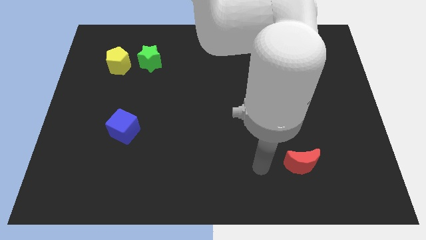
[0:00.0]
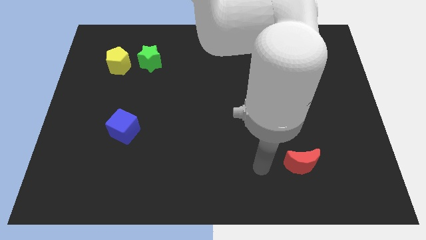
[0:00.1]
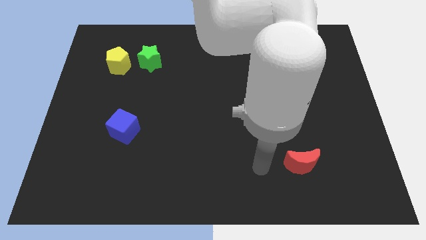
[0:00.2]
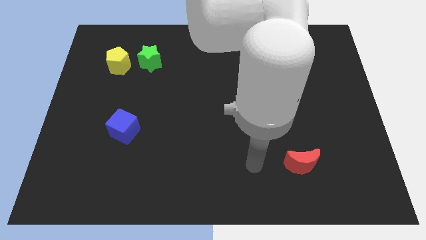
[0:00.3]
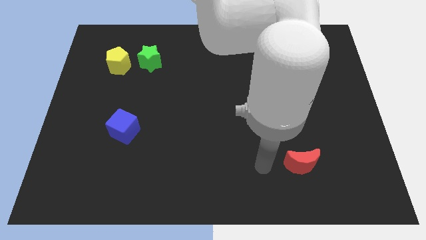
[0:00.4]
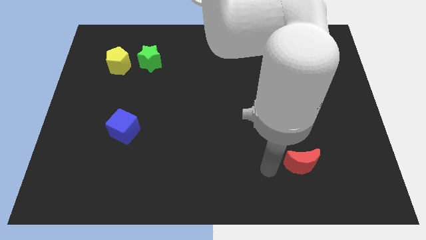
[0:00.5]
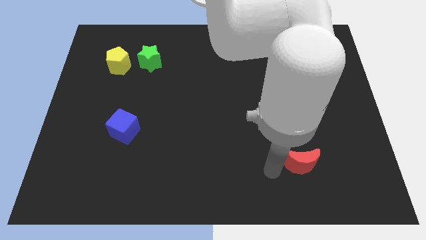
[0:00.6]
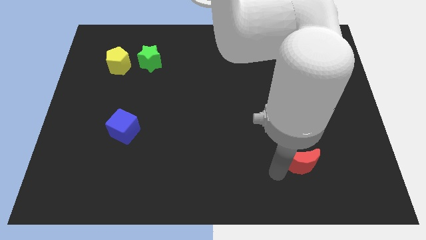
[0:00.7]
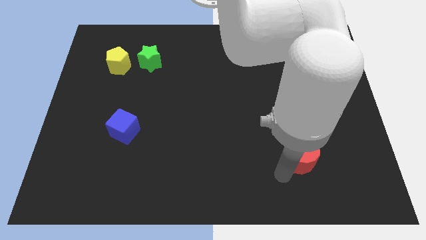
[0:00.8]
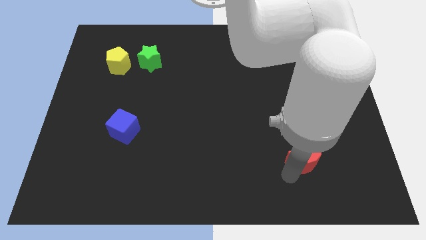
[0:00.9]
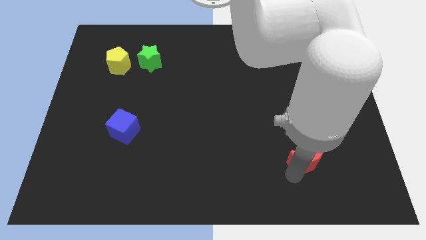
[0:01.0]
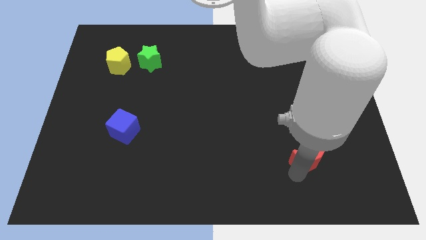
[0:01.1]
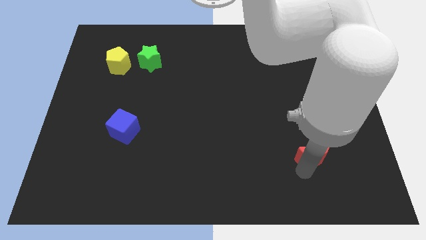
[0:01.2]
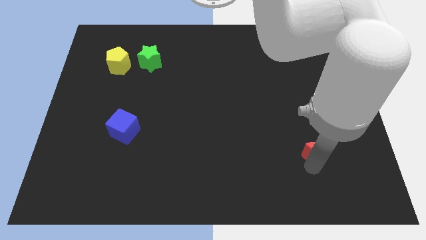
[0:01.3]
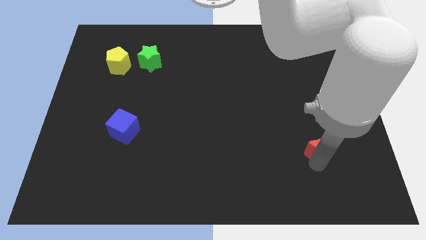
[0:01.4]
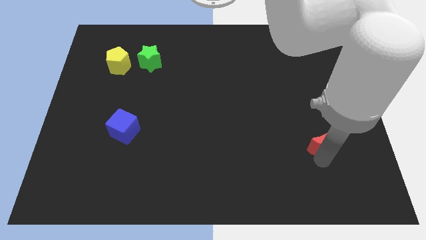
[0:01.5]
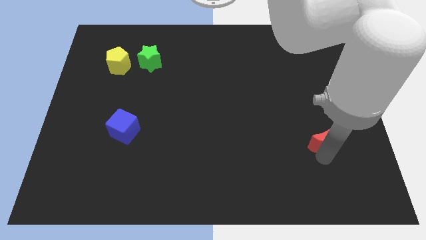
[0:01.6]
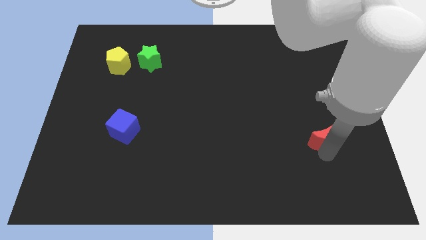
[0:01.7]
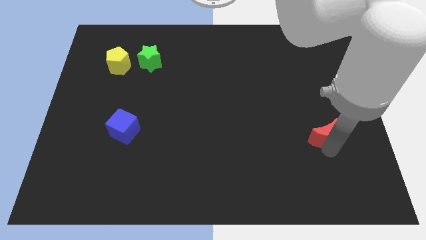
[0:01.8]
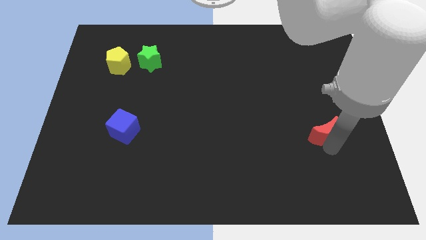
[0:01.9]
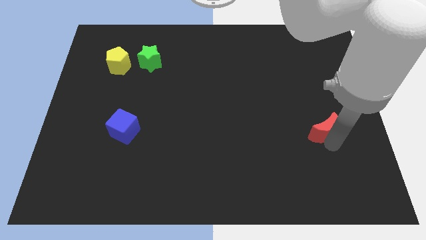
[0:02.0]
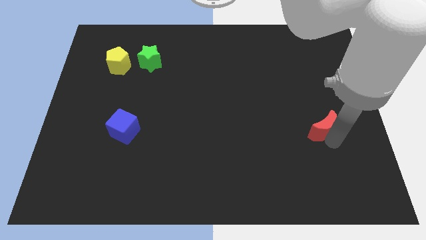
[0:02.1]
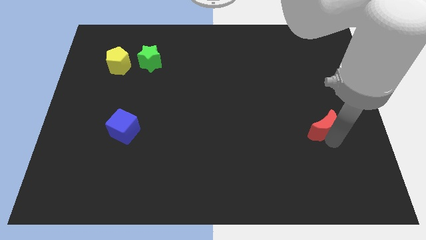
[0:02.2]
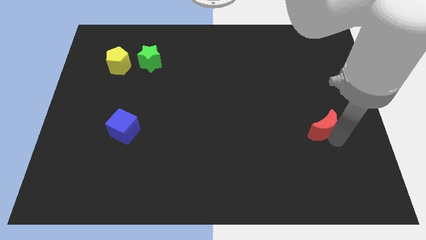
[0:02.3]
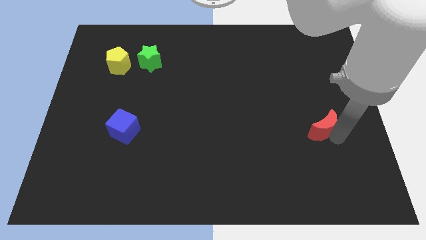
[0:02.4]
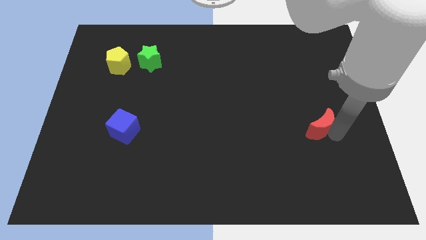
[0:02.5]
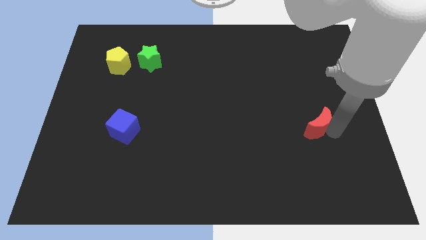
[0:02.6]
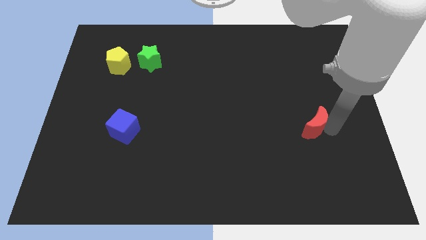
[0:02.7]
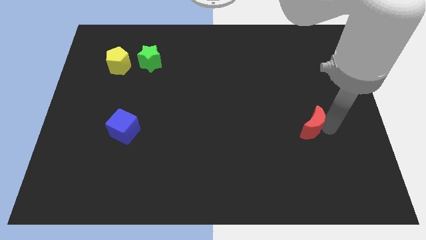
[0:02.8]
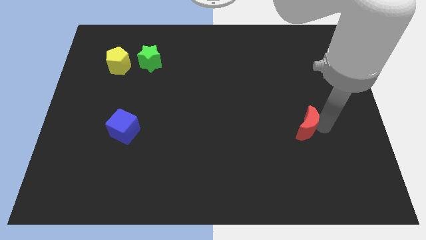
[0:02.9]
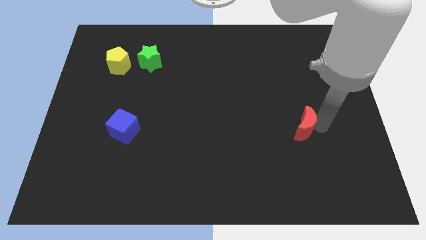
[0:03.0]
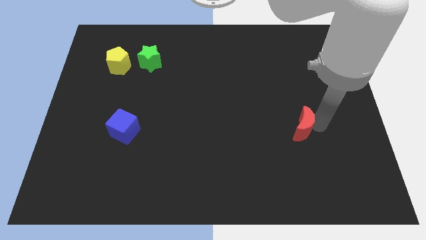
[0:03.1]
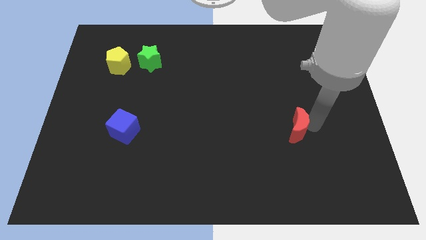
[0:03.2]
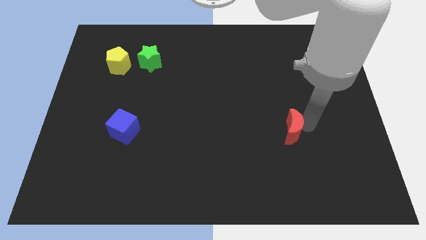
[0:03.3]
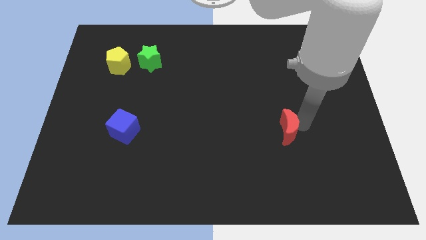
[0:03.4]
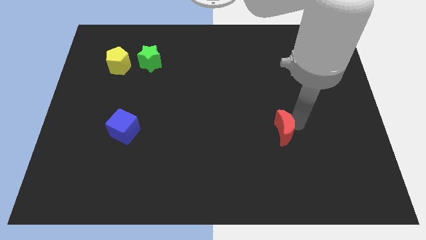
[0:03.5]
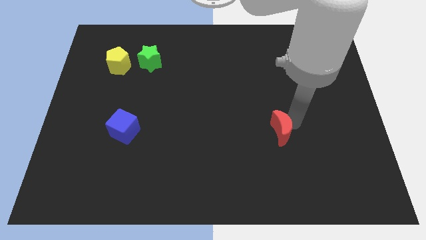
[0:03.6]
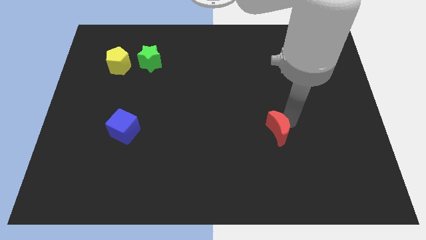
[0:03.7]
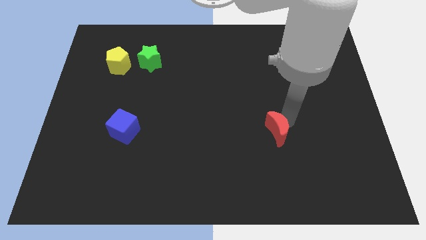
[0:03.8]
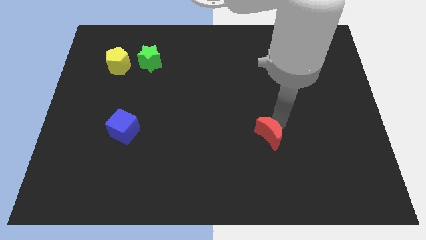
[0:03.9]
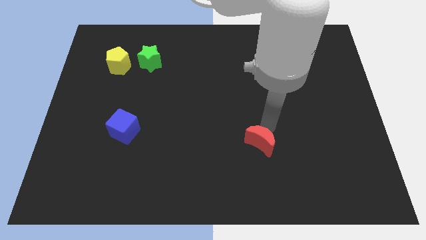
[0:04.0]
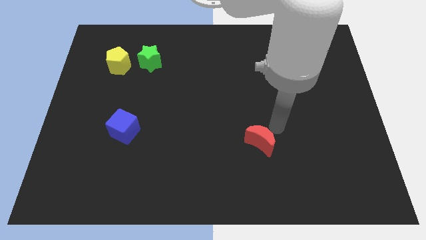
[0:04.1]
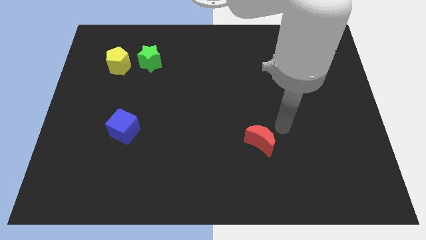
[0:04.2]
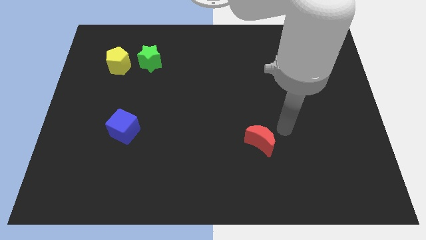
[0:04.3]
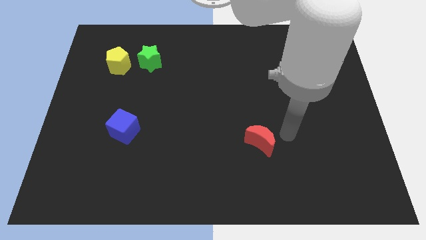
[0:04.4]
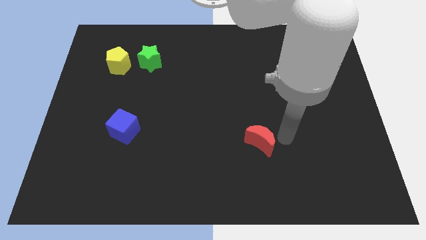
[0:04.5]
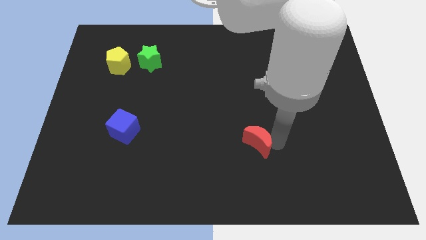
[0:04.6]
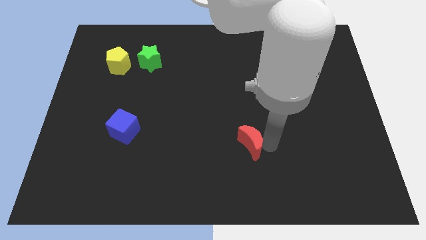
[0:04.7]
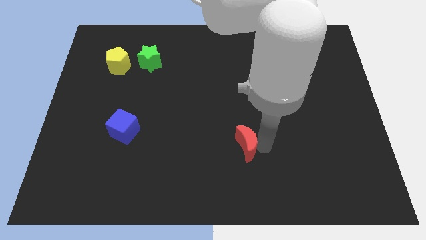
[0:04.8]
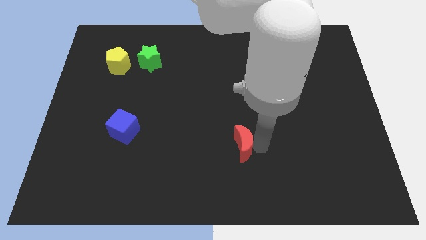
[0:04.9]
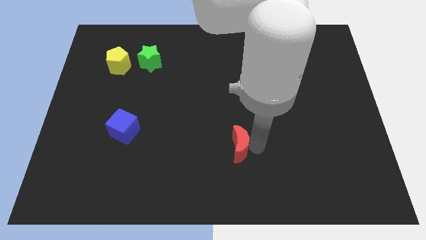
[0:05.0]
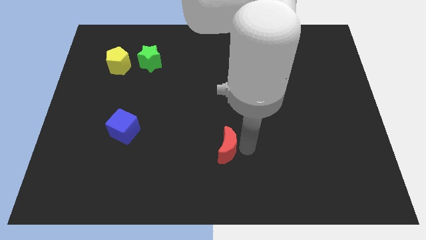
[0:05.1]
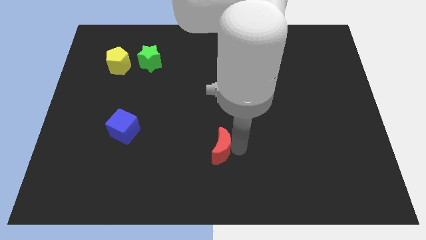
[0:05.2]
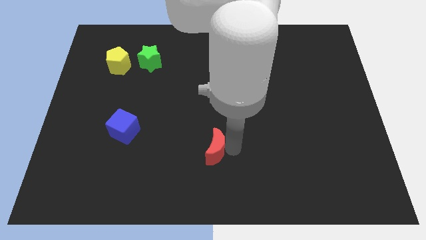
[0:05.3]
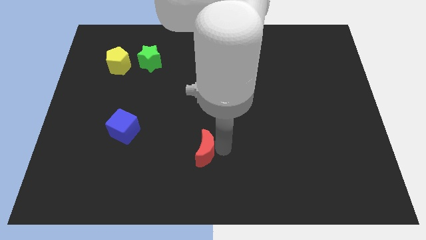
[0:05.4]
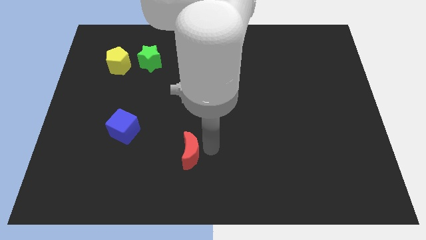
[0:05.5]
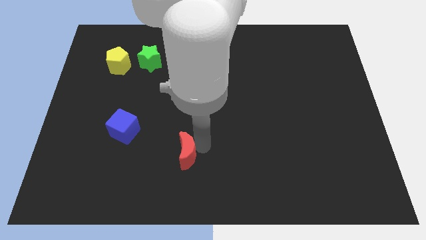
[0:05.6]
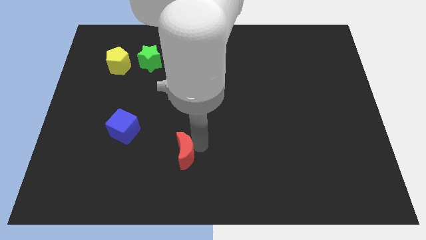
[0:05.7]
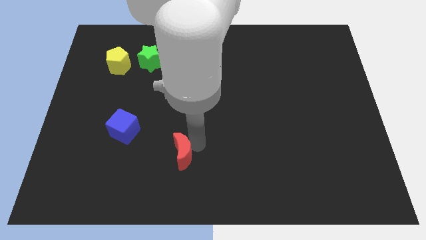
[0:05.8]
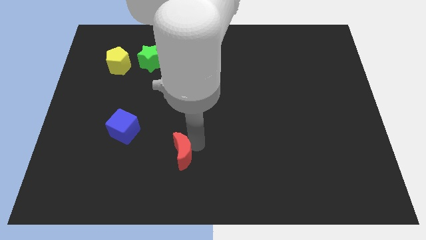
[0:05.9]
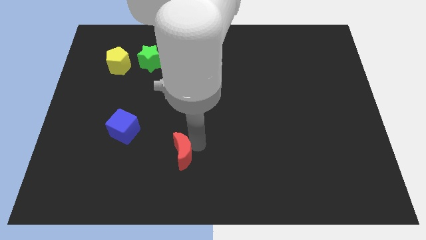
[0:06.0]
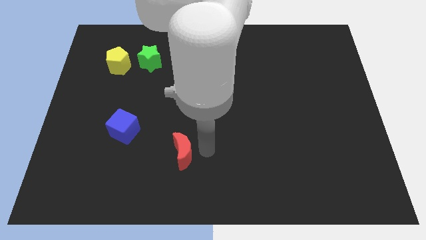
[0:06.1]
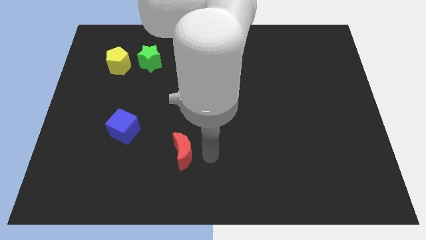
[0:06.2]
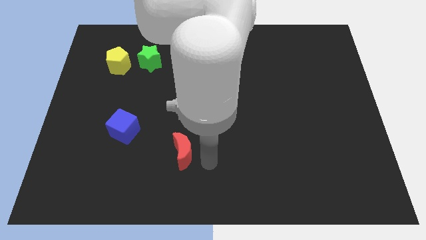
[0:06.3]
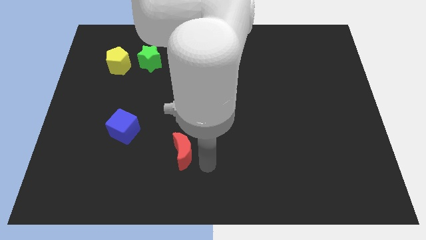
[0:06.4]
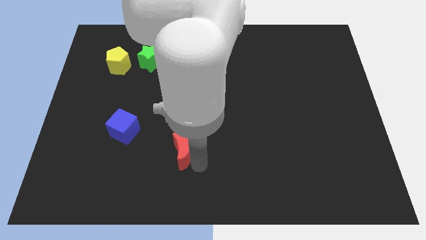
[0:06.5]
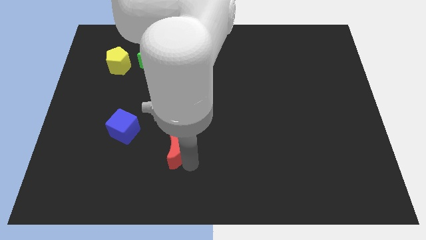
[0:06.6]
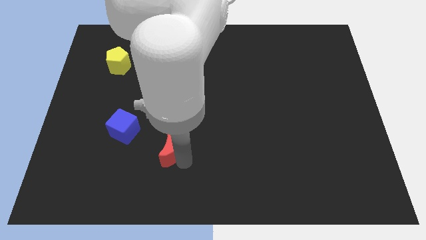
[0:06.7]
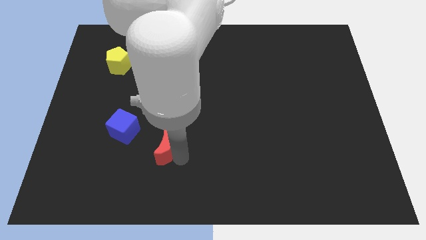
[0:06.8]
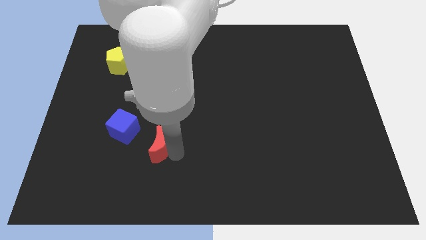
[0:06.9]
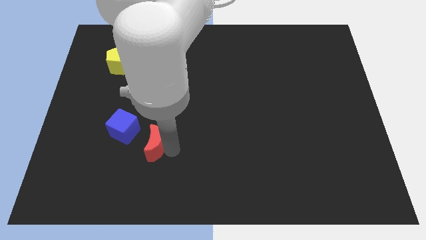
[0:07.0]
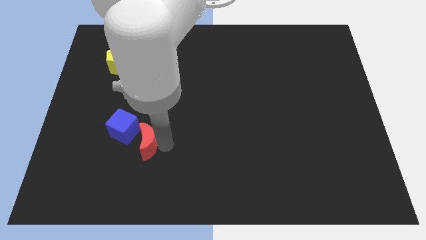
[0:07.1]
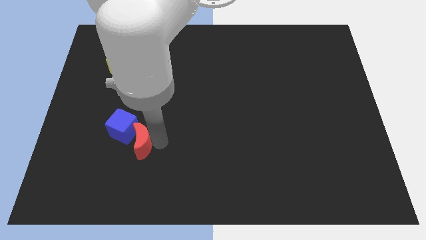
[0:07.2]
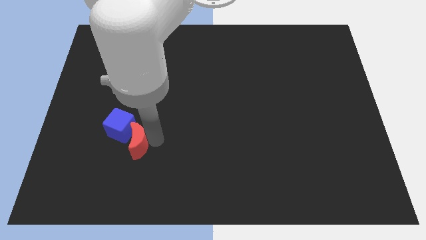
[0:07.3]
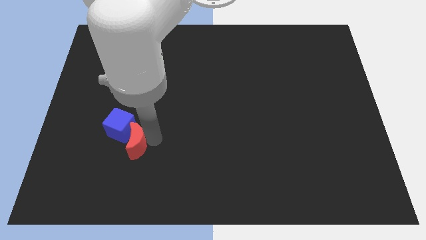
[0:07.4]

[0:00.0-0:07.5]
put the moon next to the blue block

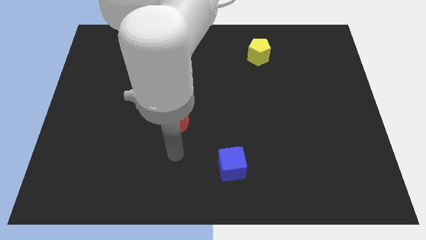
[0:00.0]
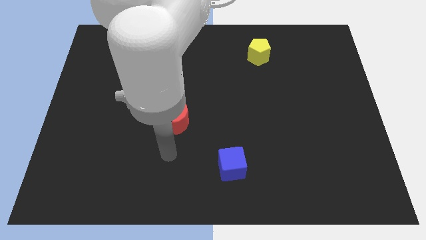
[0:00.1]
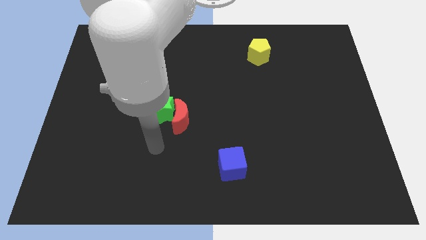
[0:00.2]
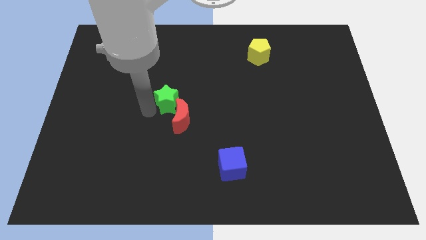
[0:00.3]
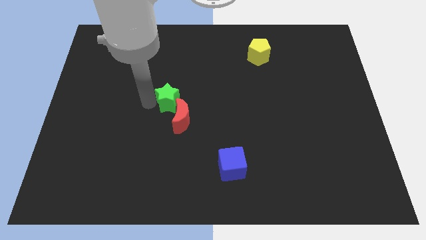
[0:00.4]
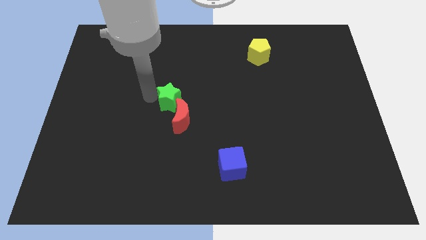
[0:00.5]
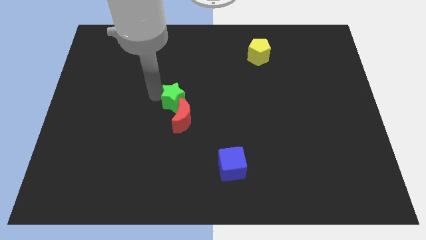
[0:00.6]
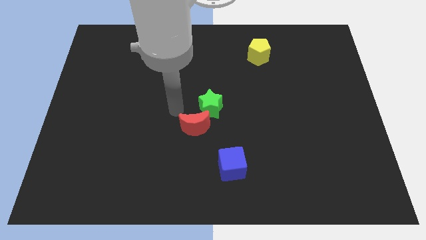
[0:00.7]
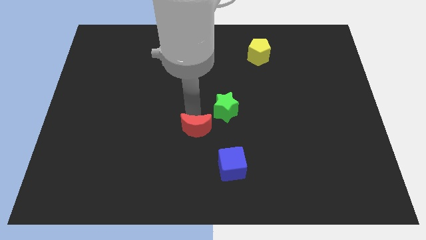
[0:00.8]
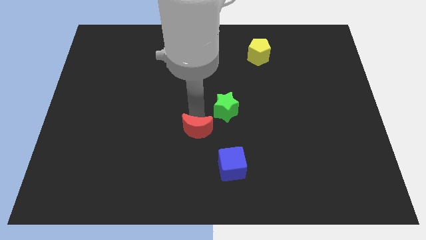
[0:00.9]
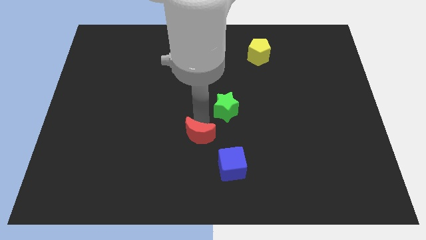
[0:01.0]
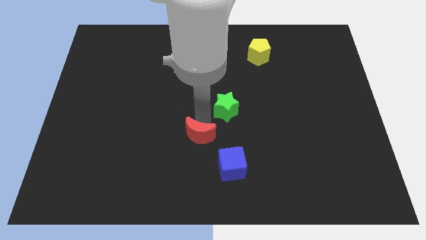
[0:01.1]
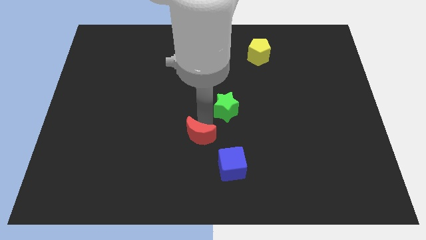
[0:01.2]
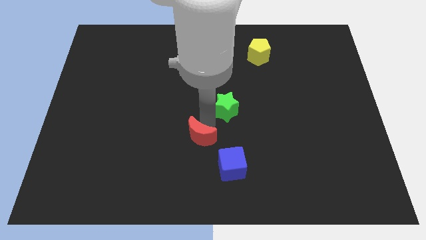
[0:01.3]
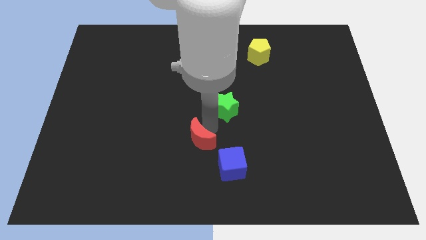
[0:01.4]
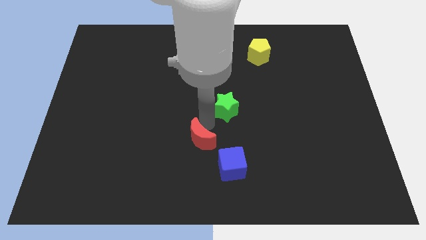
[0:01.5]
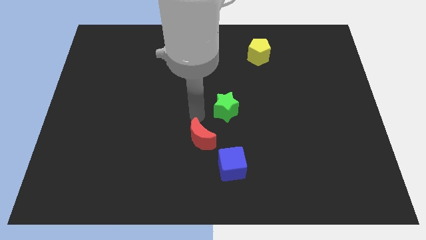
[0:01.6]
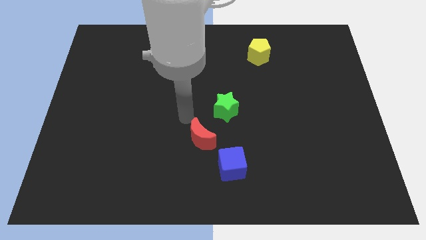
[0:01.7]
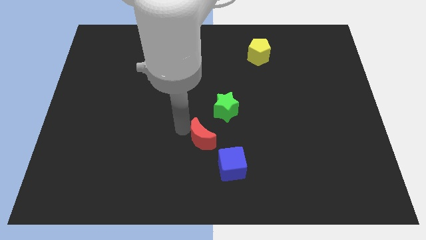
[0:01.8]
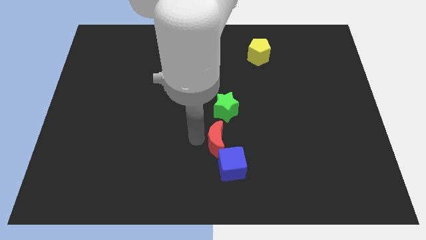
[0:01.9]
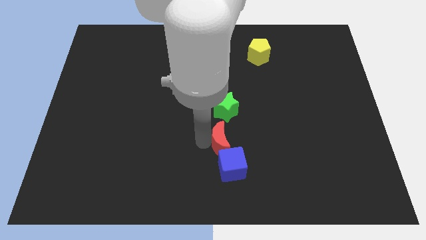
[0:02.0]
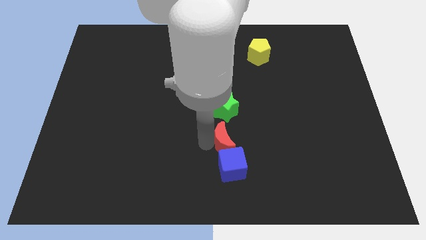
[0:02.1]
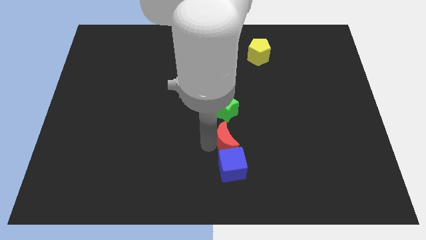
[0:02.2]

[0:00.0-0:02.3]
push the red block next to the cube
